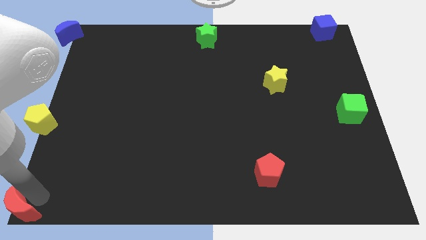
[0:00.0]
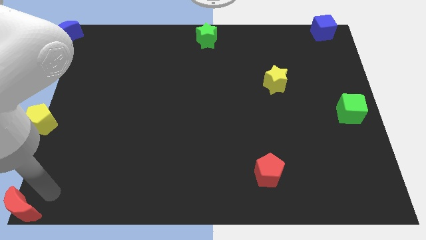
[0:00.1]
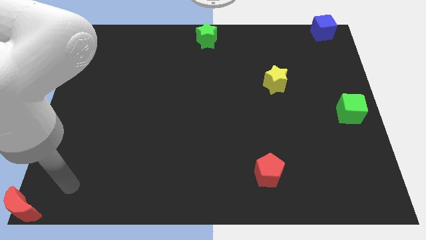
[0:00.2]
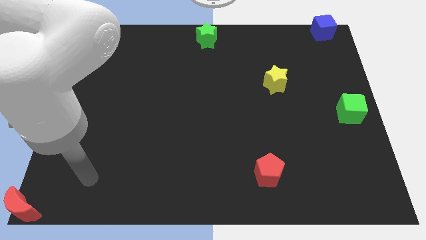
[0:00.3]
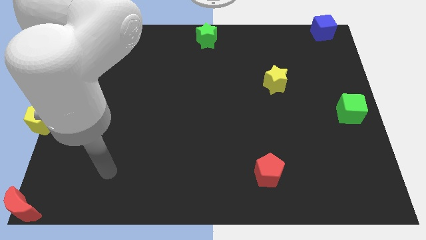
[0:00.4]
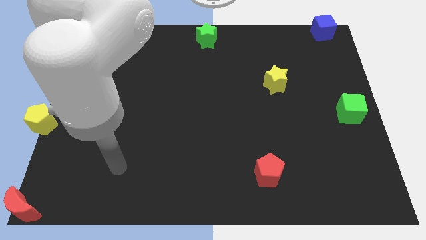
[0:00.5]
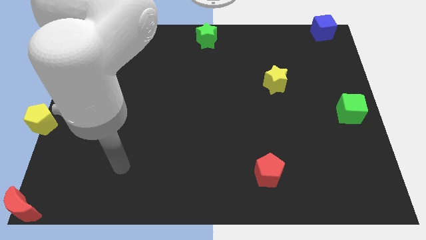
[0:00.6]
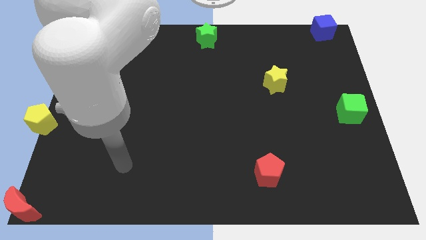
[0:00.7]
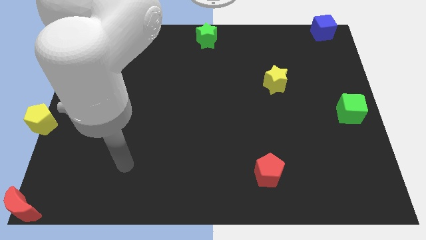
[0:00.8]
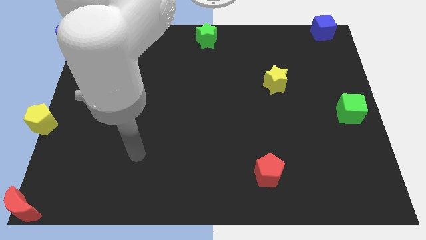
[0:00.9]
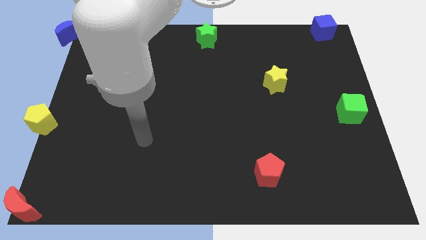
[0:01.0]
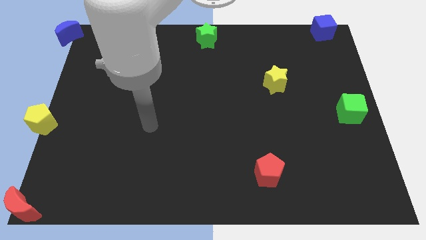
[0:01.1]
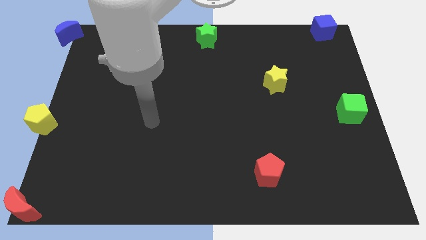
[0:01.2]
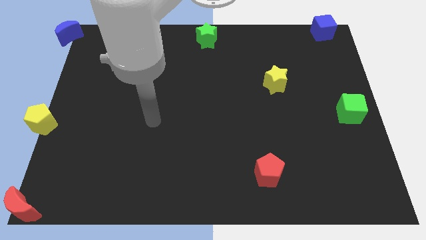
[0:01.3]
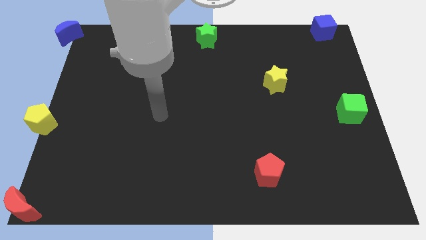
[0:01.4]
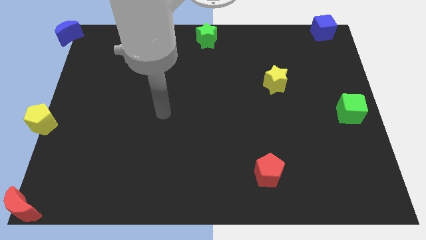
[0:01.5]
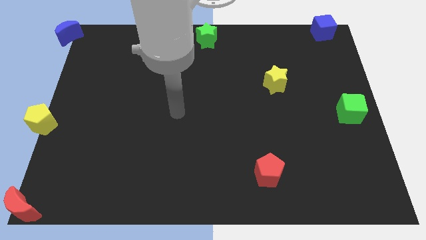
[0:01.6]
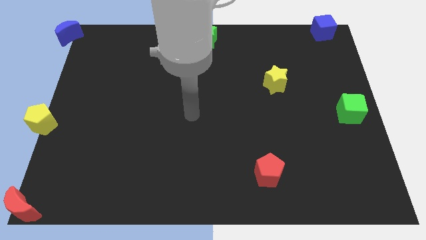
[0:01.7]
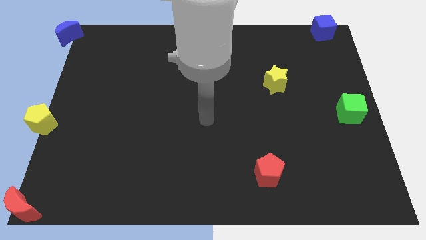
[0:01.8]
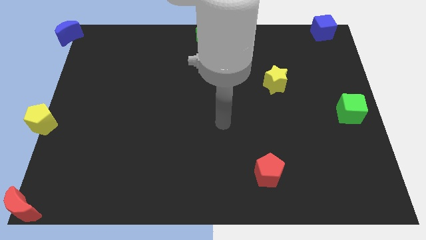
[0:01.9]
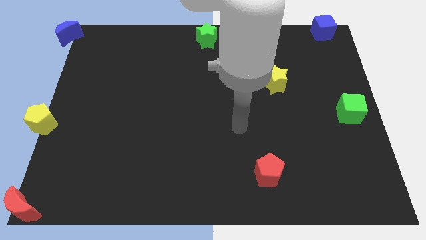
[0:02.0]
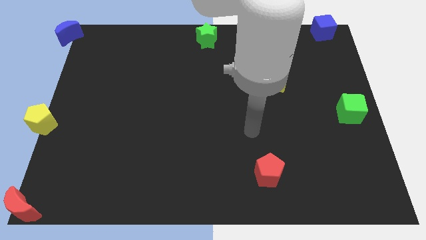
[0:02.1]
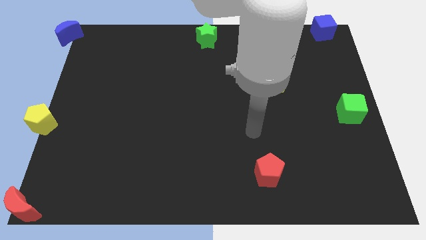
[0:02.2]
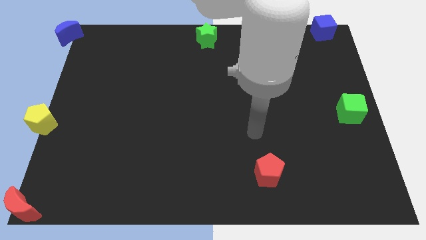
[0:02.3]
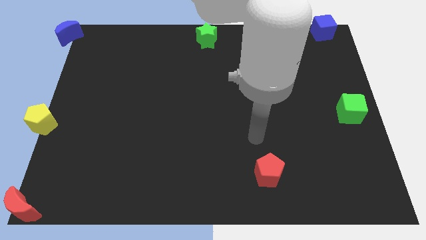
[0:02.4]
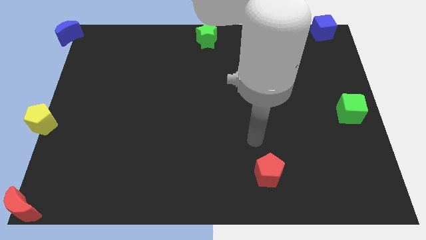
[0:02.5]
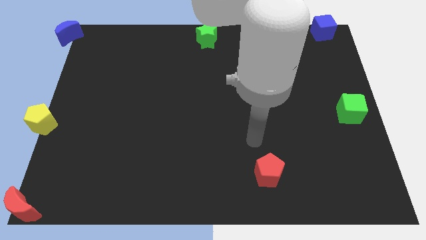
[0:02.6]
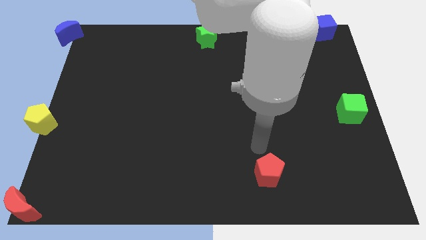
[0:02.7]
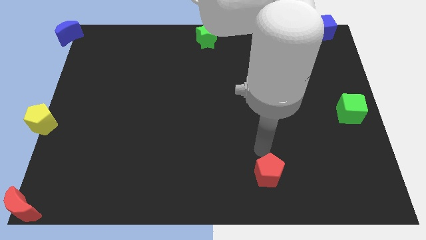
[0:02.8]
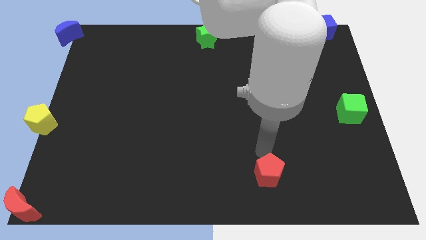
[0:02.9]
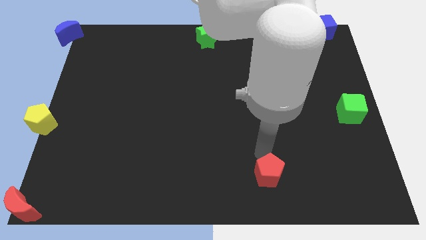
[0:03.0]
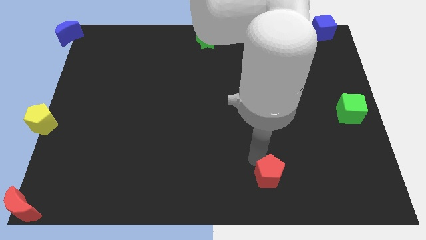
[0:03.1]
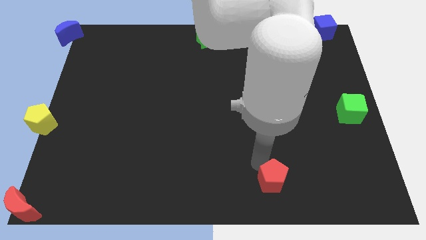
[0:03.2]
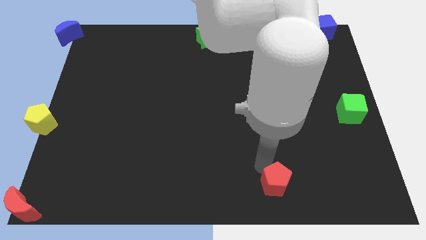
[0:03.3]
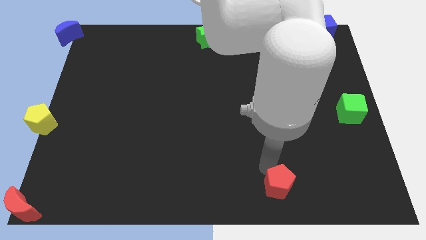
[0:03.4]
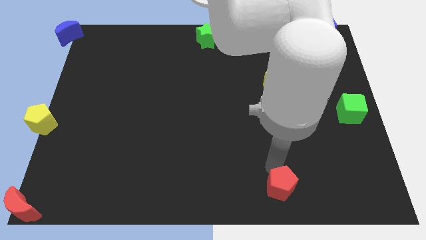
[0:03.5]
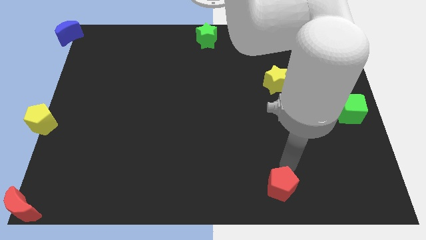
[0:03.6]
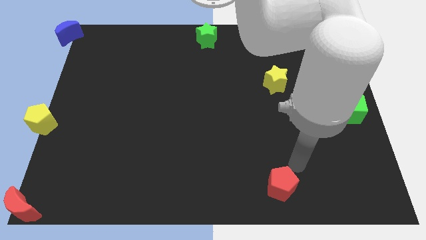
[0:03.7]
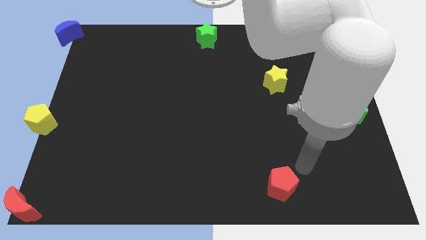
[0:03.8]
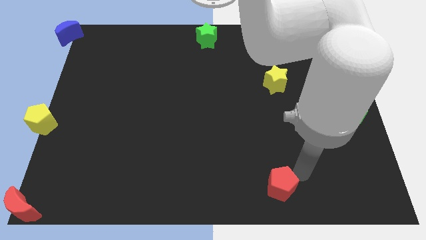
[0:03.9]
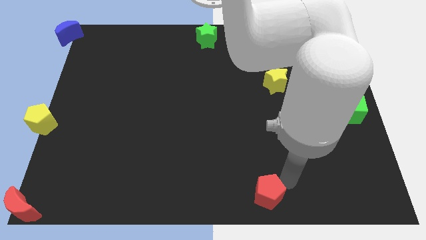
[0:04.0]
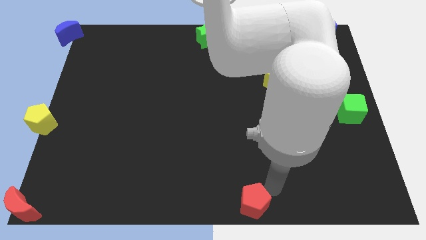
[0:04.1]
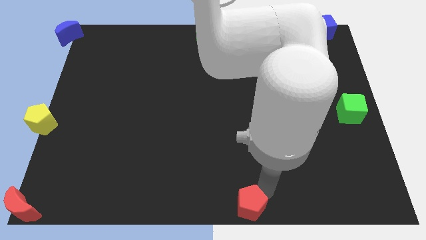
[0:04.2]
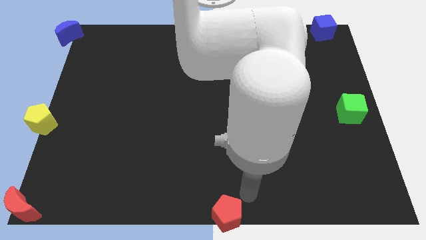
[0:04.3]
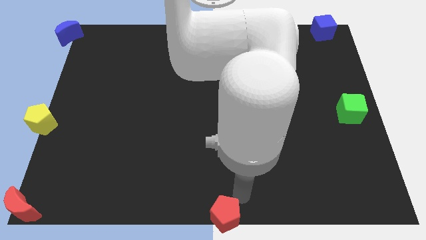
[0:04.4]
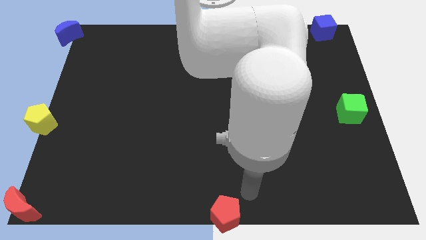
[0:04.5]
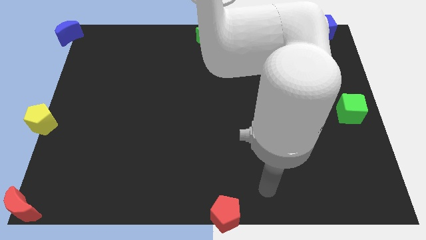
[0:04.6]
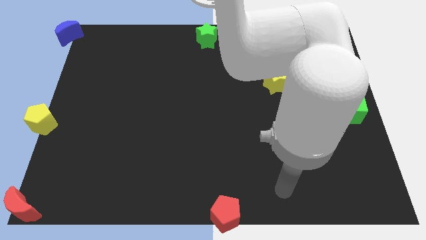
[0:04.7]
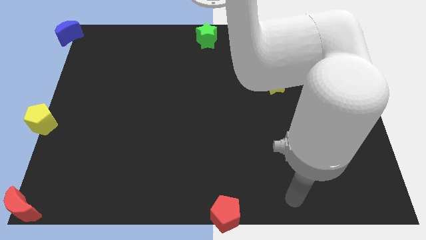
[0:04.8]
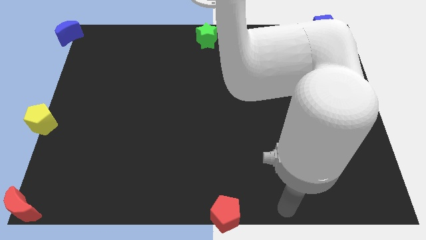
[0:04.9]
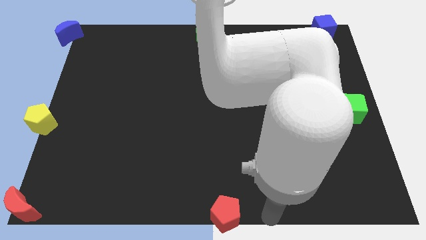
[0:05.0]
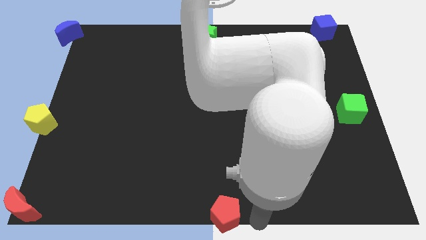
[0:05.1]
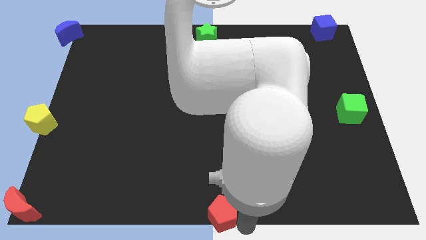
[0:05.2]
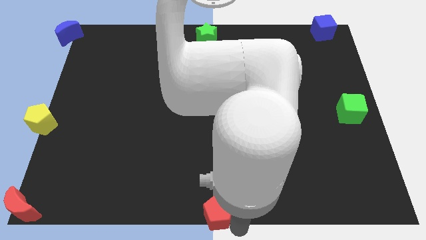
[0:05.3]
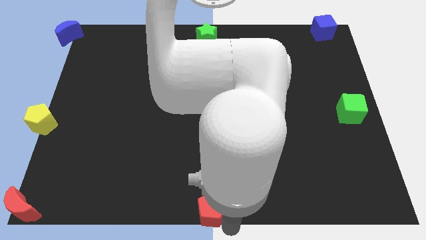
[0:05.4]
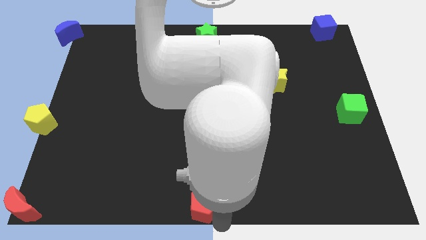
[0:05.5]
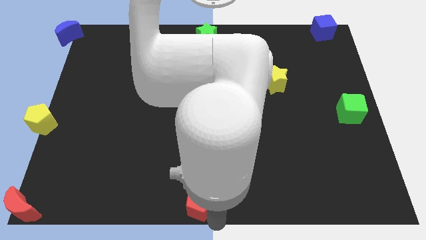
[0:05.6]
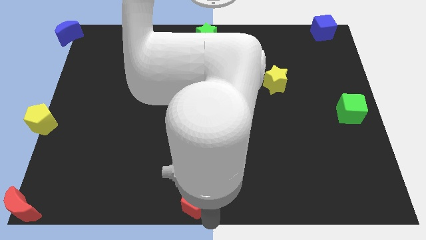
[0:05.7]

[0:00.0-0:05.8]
move the red pentagon to the bottom center of the board

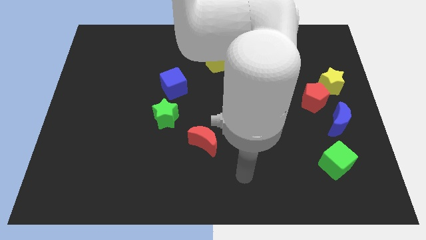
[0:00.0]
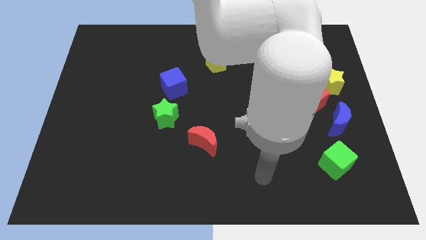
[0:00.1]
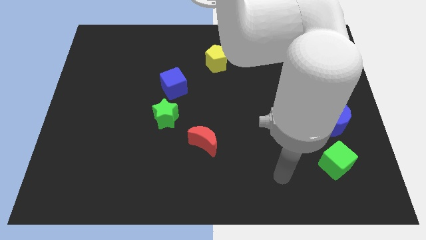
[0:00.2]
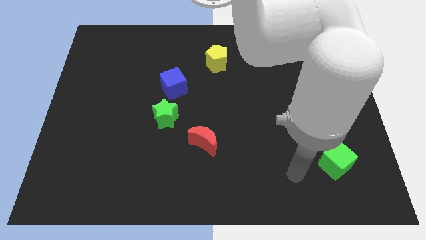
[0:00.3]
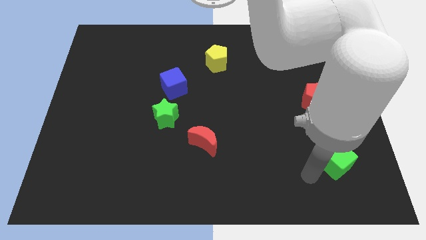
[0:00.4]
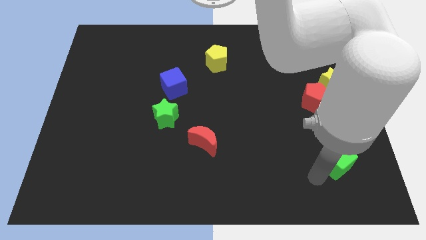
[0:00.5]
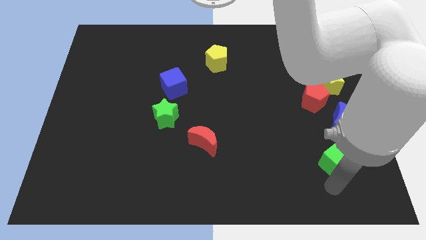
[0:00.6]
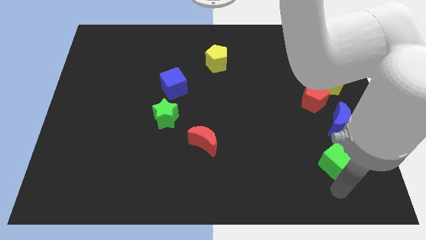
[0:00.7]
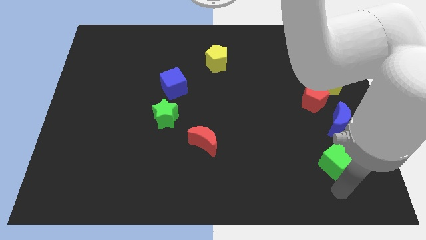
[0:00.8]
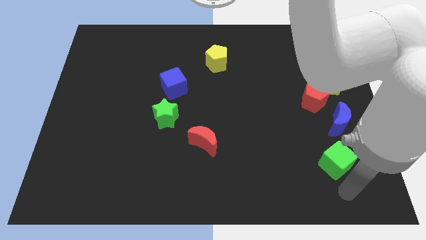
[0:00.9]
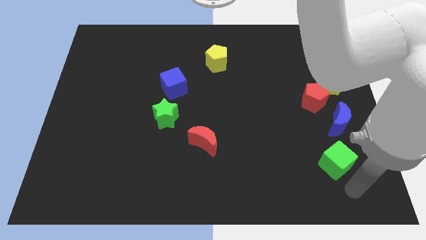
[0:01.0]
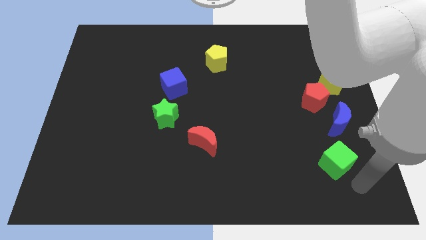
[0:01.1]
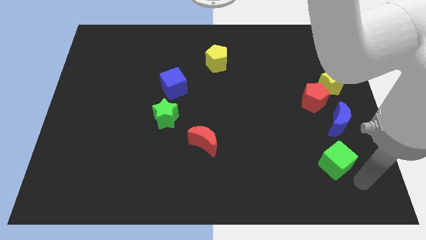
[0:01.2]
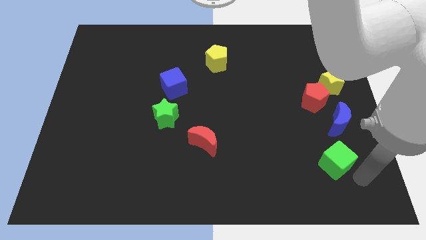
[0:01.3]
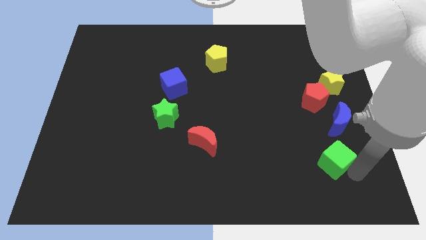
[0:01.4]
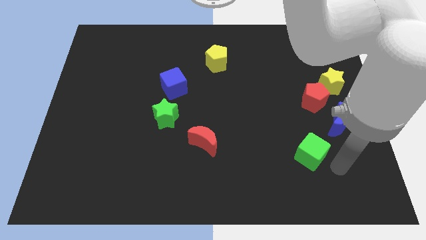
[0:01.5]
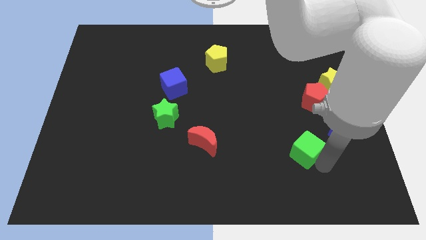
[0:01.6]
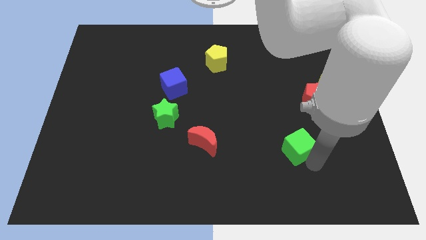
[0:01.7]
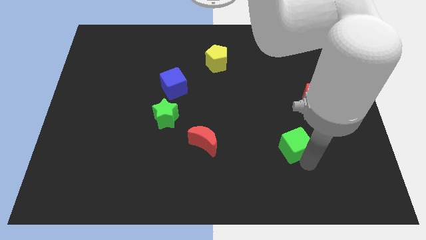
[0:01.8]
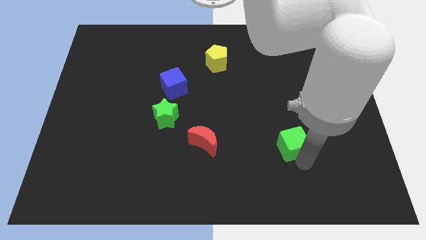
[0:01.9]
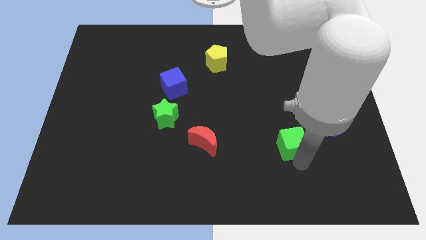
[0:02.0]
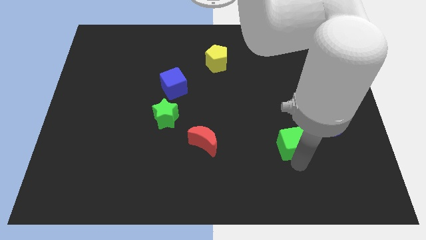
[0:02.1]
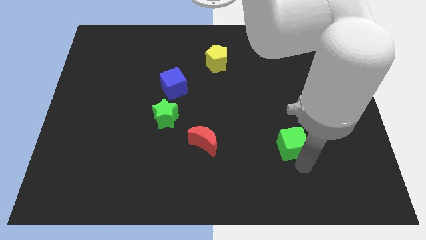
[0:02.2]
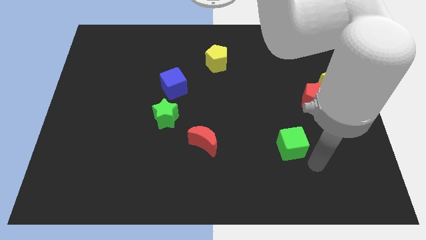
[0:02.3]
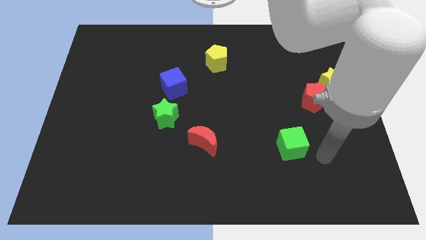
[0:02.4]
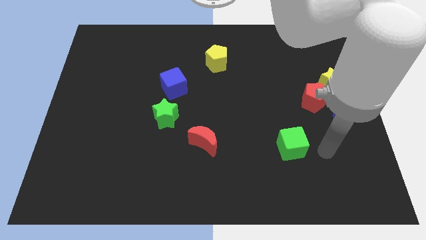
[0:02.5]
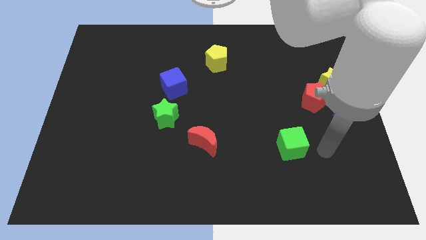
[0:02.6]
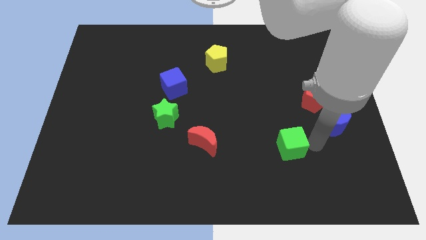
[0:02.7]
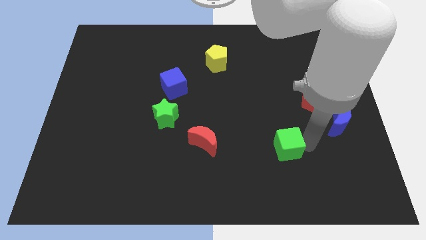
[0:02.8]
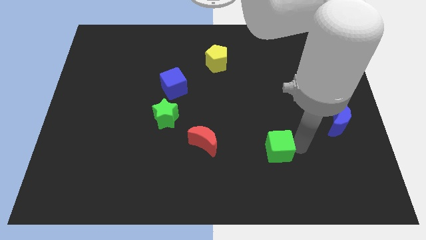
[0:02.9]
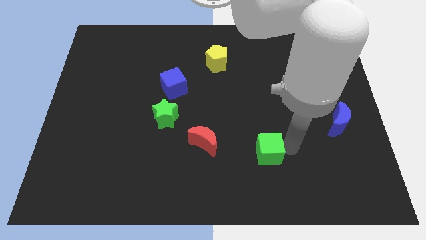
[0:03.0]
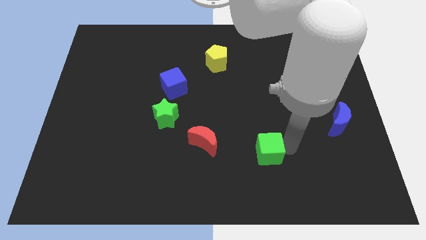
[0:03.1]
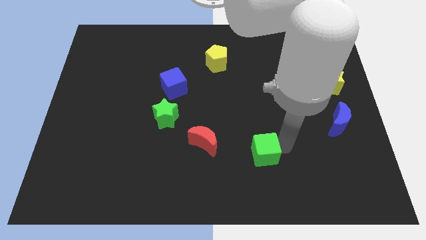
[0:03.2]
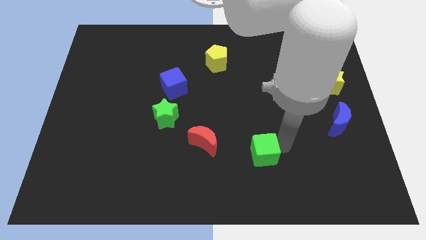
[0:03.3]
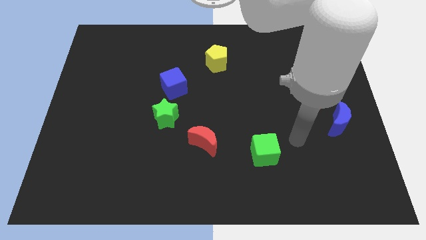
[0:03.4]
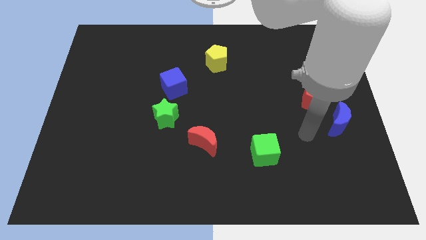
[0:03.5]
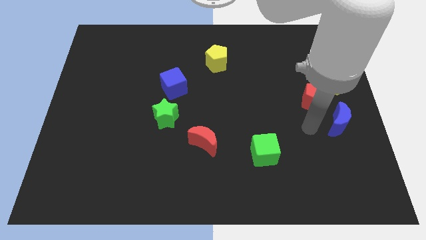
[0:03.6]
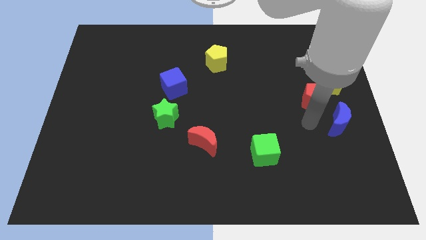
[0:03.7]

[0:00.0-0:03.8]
separate the green cube from the blue crescent
